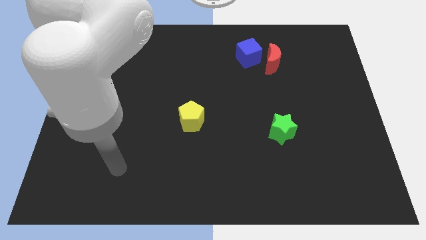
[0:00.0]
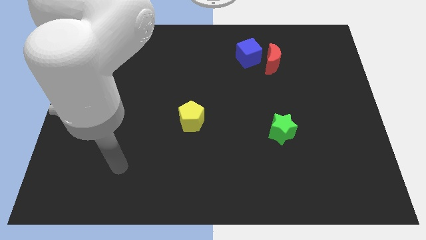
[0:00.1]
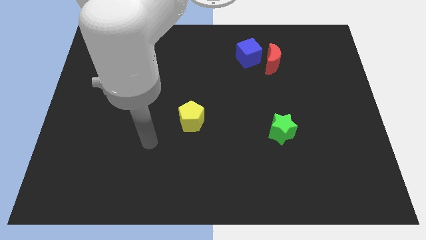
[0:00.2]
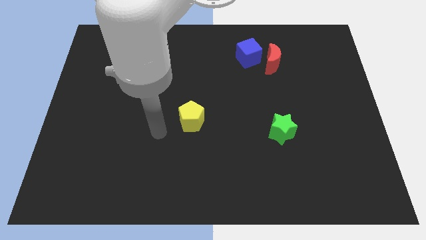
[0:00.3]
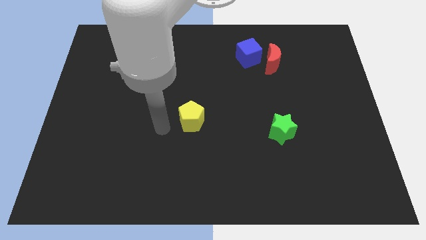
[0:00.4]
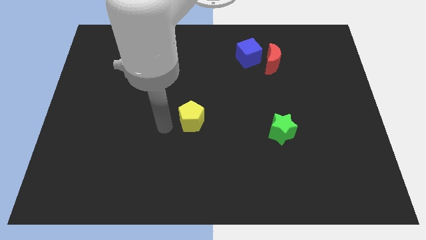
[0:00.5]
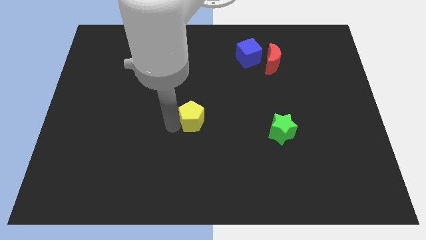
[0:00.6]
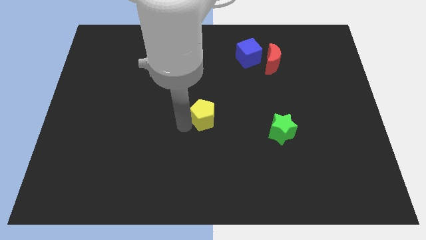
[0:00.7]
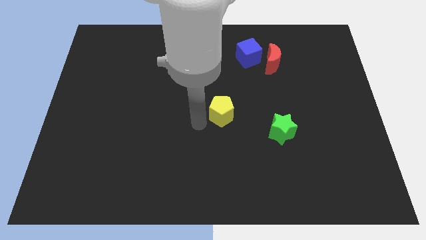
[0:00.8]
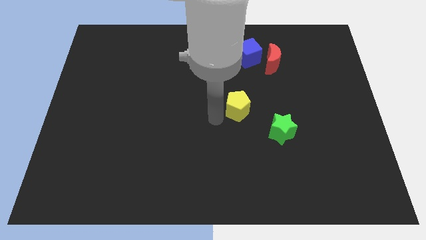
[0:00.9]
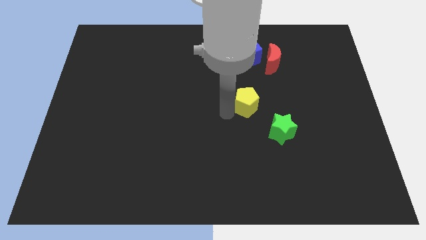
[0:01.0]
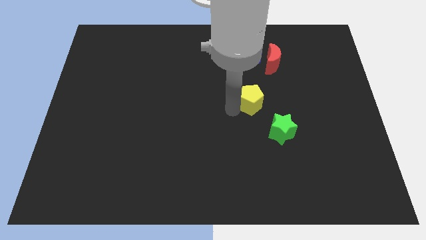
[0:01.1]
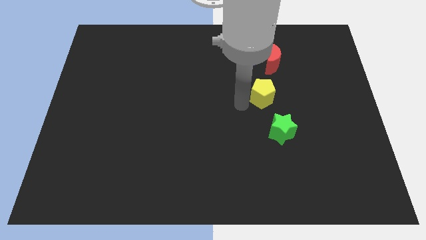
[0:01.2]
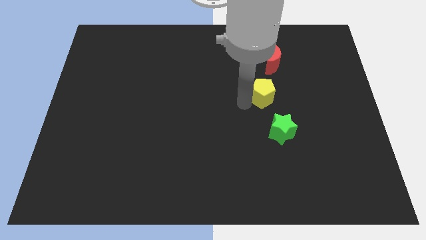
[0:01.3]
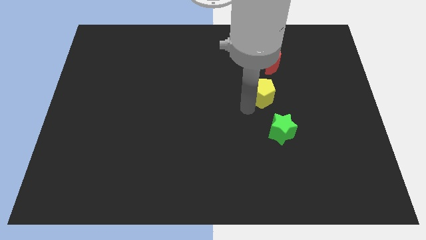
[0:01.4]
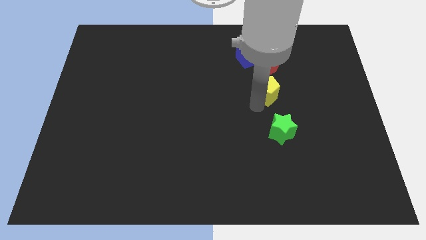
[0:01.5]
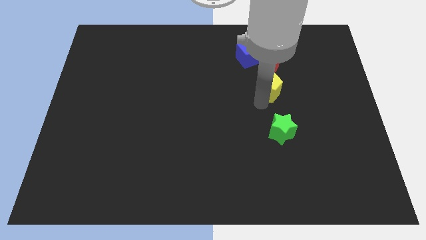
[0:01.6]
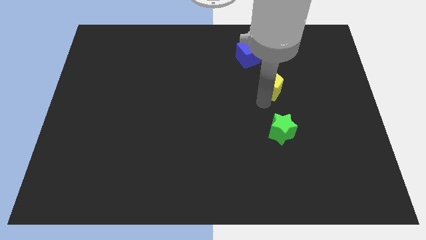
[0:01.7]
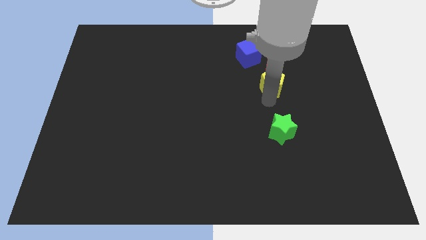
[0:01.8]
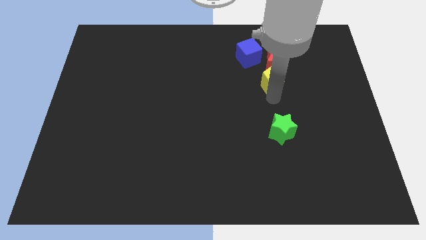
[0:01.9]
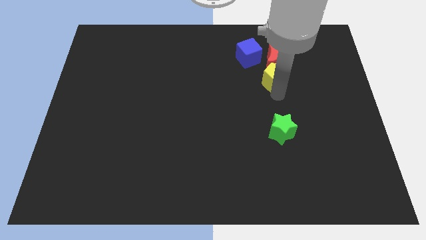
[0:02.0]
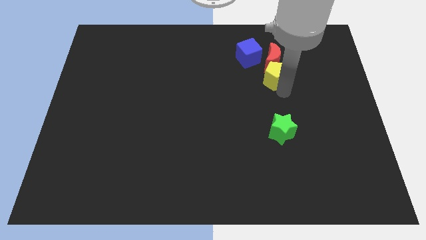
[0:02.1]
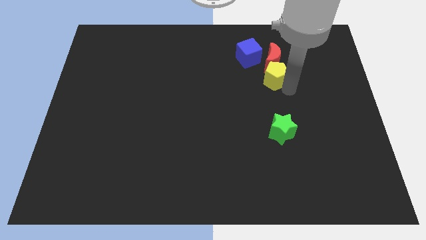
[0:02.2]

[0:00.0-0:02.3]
slide the yellow block next to the red block

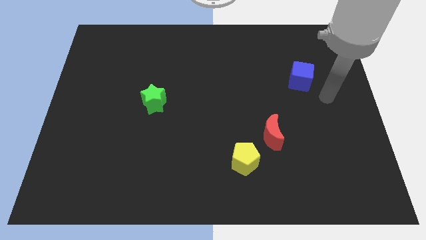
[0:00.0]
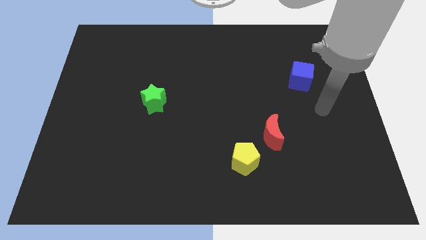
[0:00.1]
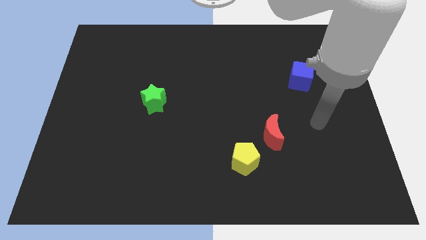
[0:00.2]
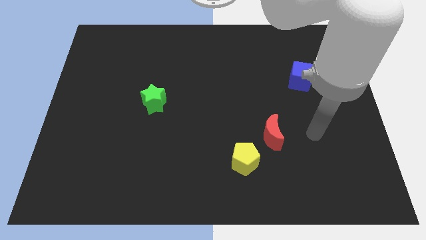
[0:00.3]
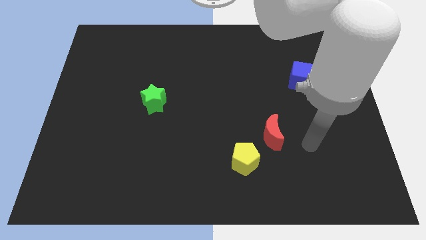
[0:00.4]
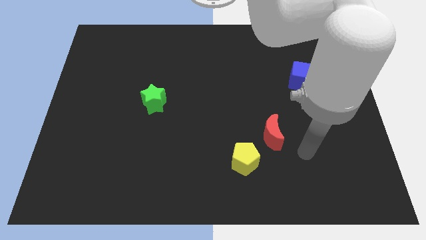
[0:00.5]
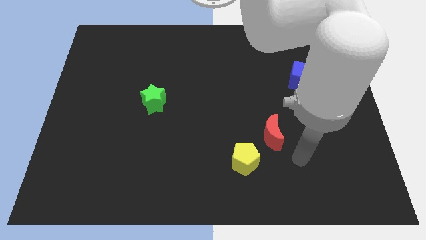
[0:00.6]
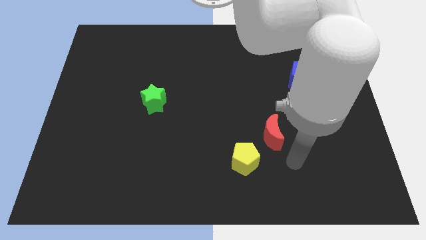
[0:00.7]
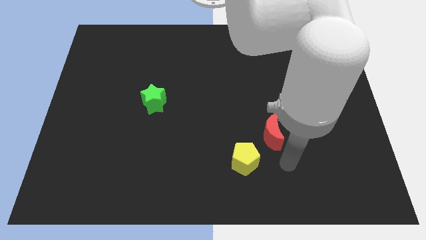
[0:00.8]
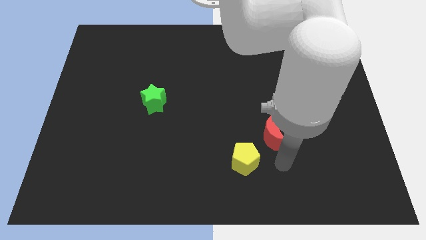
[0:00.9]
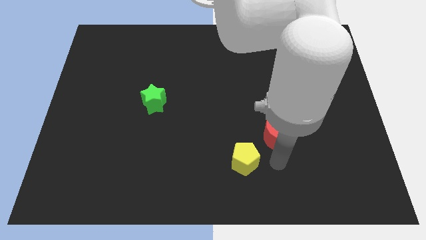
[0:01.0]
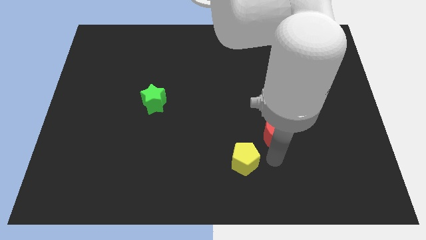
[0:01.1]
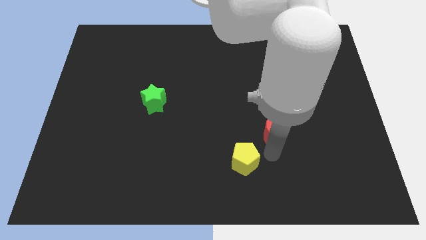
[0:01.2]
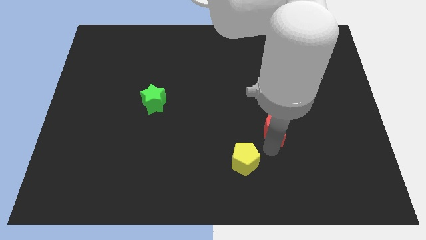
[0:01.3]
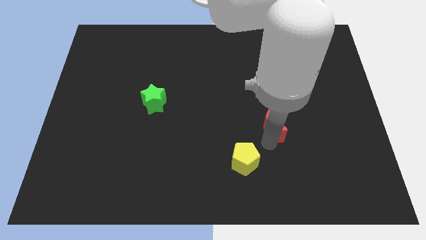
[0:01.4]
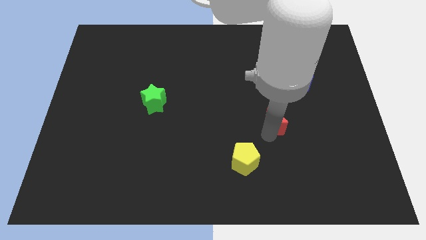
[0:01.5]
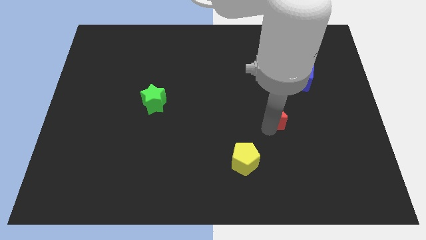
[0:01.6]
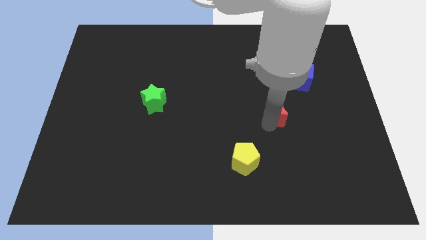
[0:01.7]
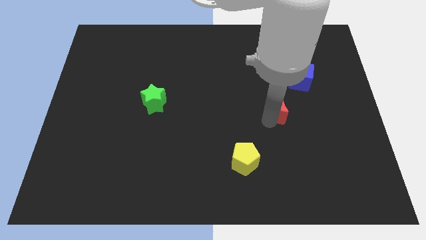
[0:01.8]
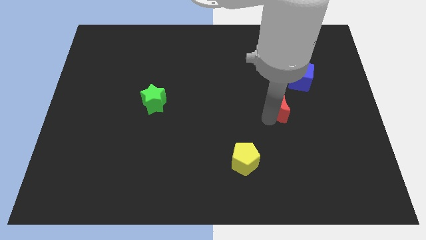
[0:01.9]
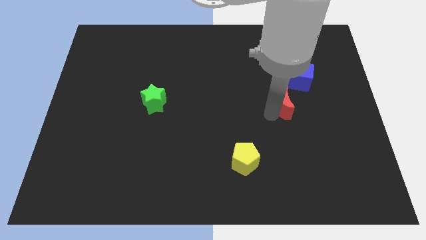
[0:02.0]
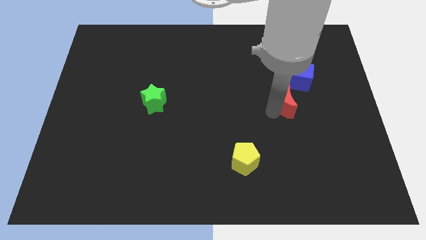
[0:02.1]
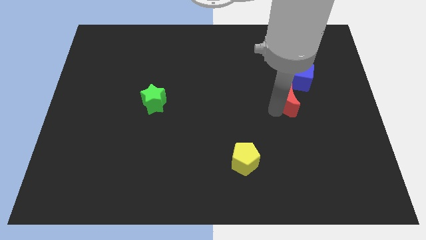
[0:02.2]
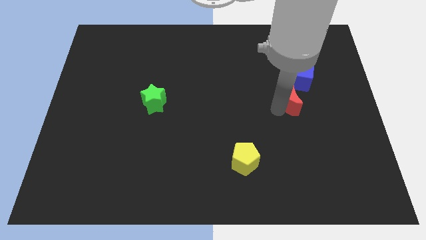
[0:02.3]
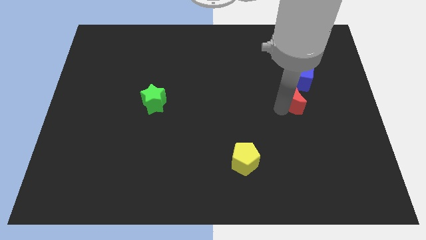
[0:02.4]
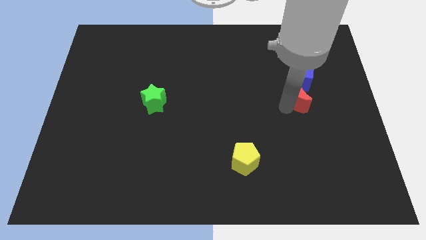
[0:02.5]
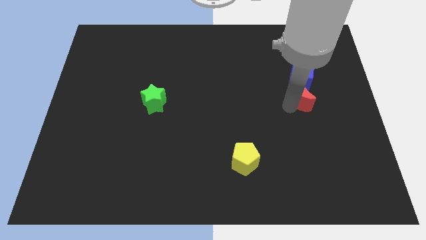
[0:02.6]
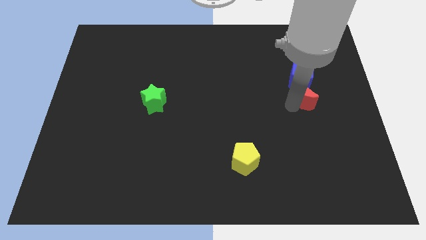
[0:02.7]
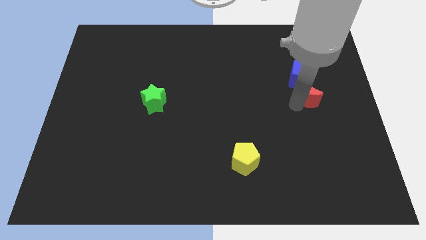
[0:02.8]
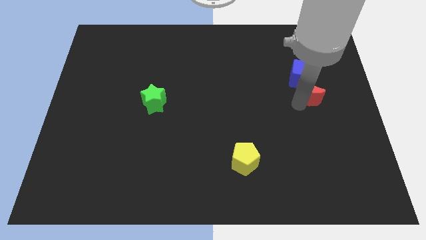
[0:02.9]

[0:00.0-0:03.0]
move the moon towards the cube

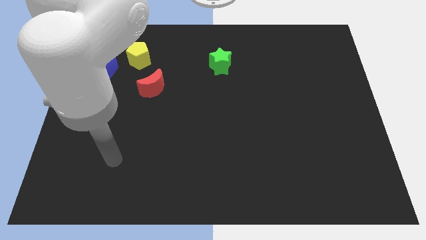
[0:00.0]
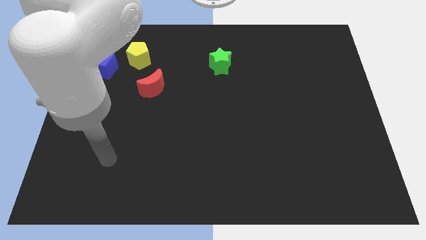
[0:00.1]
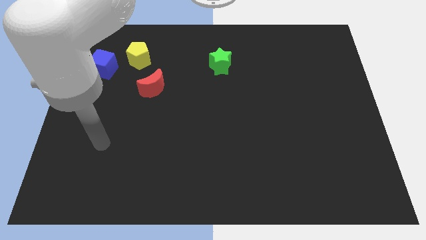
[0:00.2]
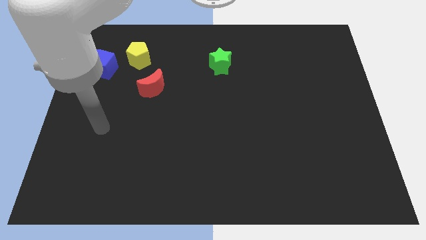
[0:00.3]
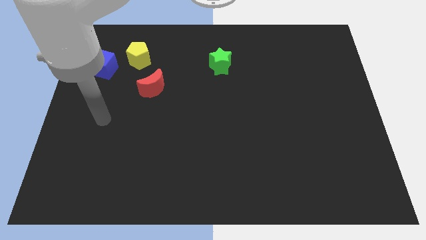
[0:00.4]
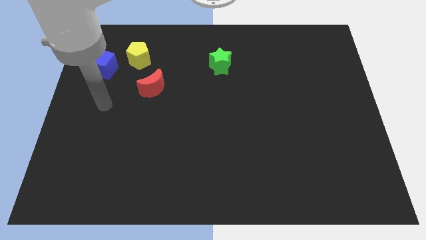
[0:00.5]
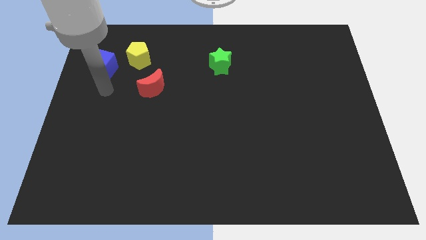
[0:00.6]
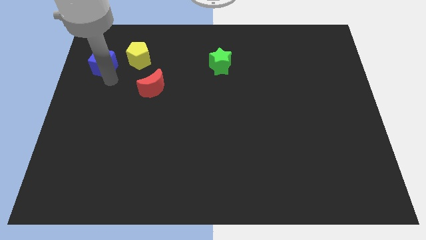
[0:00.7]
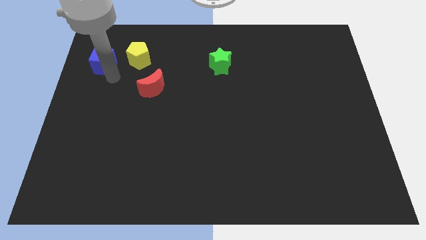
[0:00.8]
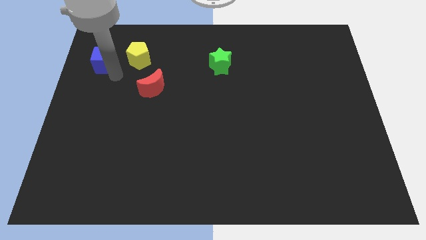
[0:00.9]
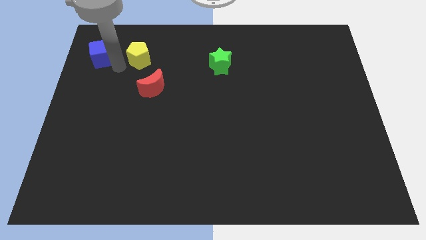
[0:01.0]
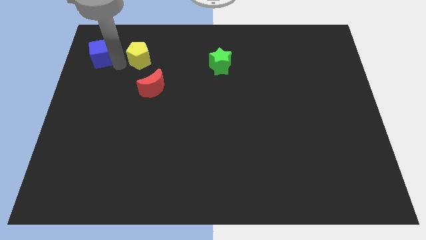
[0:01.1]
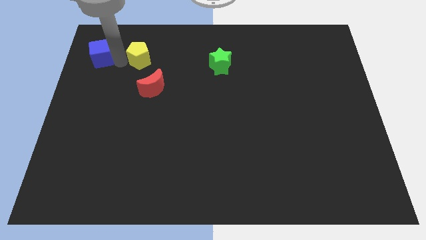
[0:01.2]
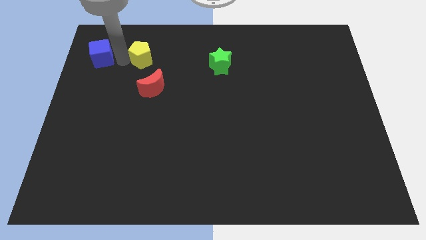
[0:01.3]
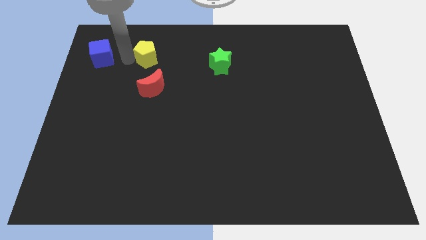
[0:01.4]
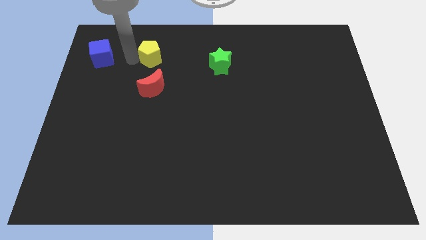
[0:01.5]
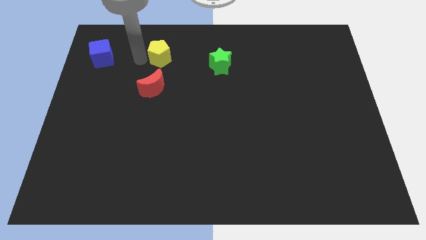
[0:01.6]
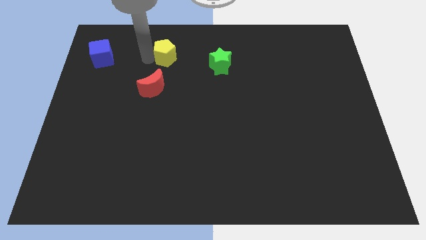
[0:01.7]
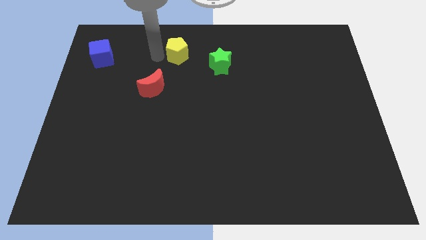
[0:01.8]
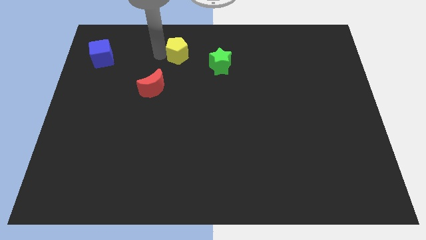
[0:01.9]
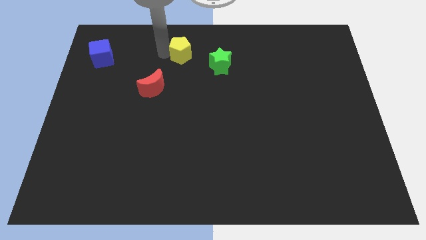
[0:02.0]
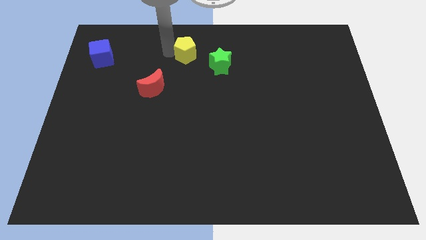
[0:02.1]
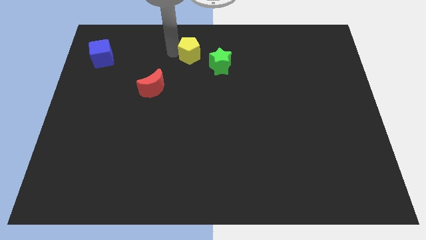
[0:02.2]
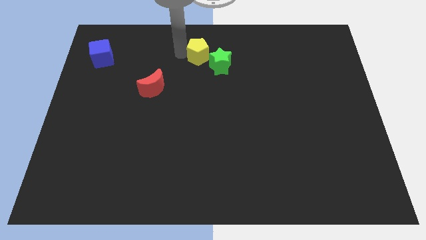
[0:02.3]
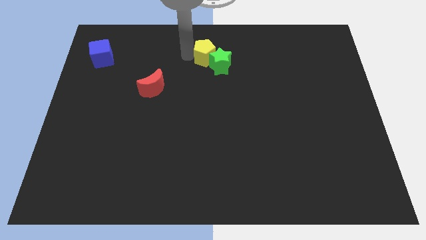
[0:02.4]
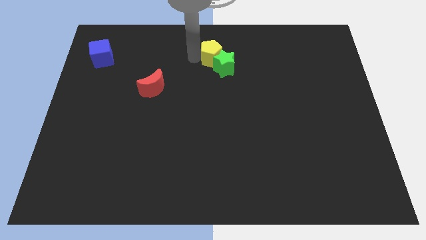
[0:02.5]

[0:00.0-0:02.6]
move the yellow pentagon close to the green star

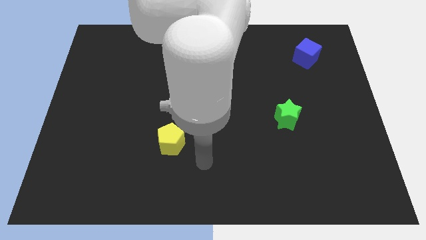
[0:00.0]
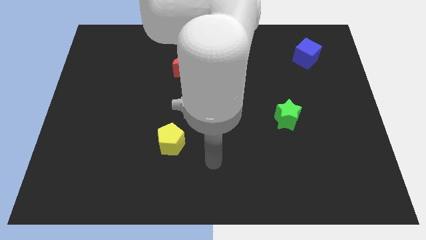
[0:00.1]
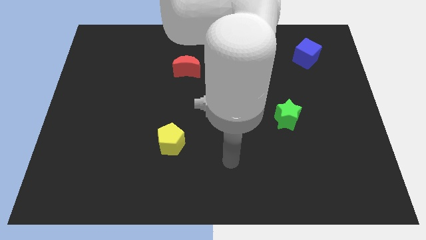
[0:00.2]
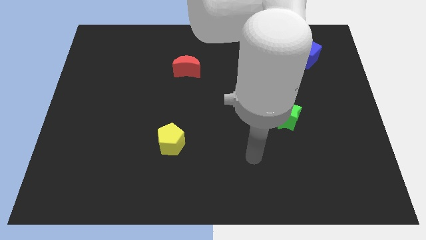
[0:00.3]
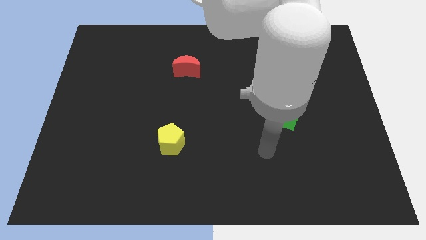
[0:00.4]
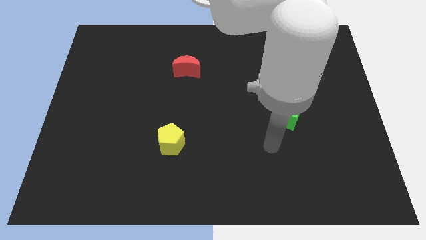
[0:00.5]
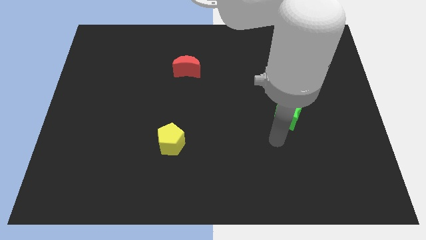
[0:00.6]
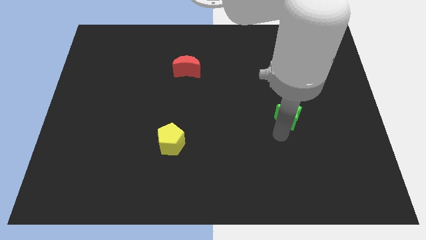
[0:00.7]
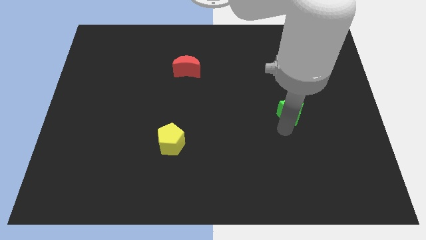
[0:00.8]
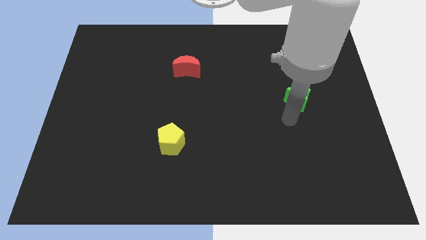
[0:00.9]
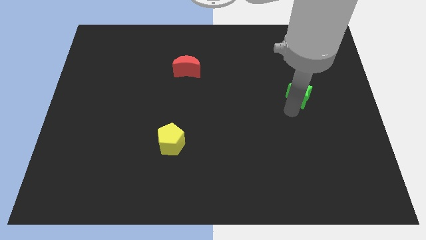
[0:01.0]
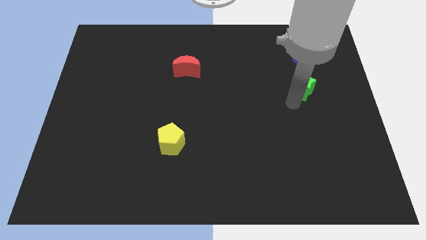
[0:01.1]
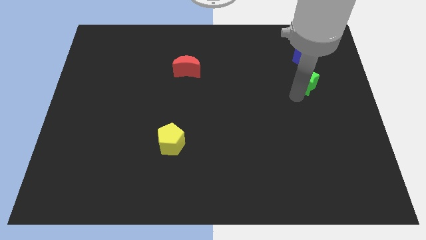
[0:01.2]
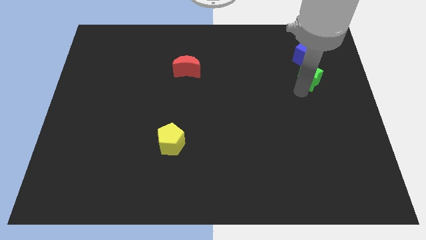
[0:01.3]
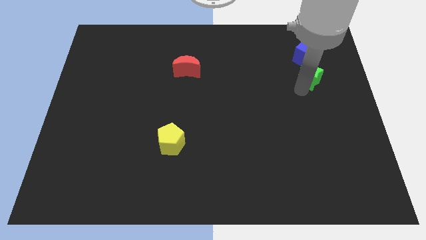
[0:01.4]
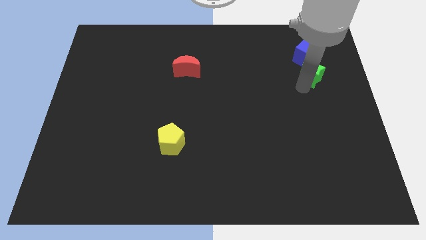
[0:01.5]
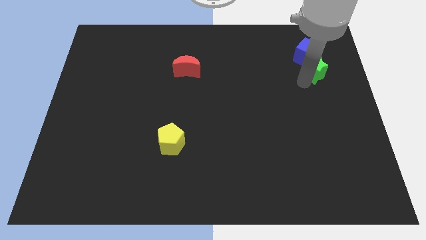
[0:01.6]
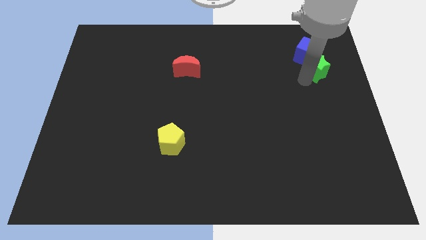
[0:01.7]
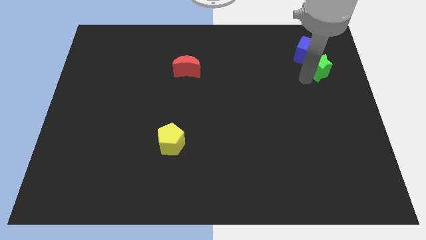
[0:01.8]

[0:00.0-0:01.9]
move the green star close to the blue cube
